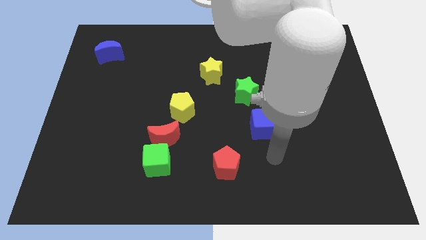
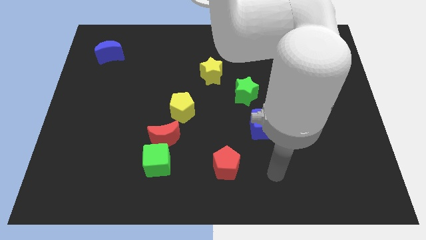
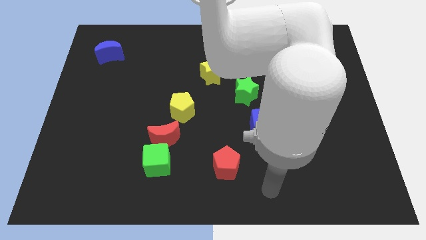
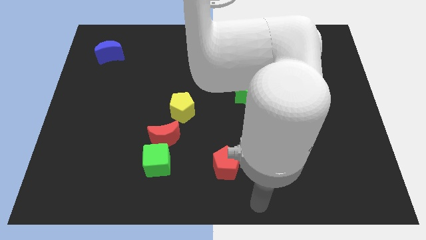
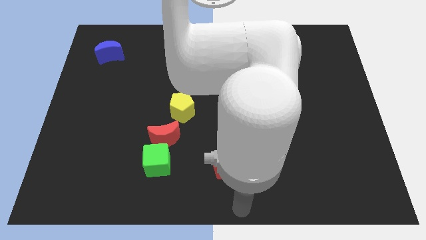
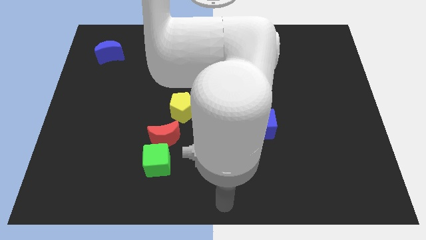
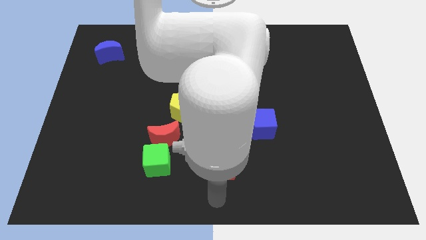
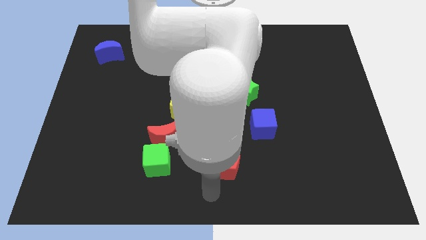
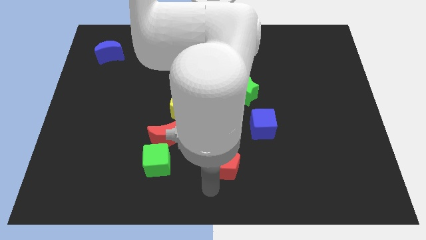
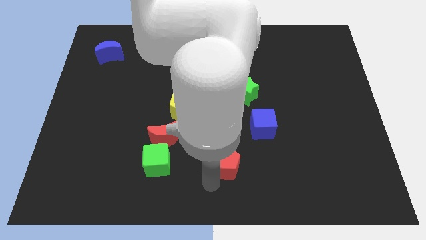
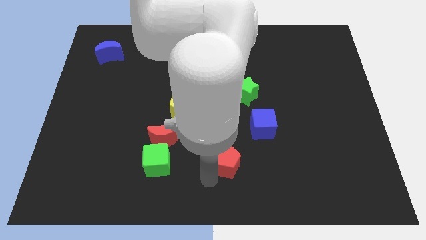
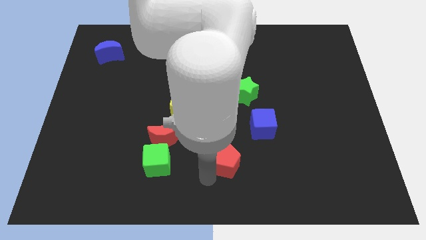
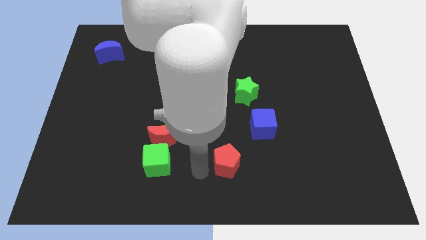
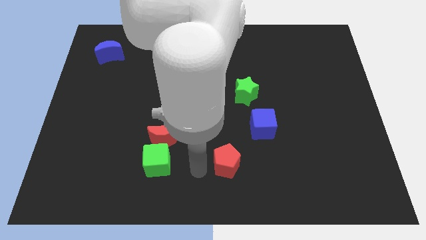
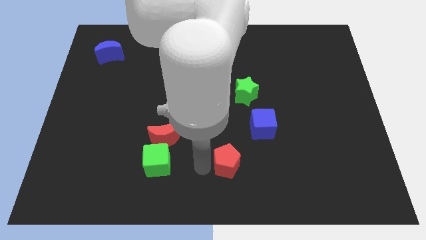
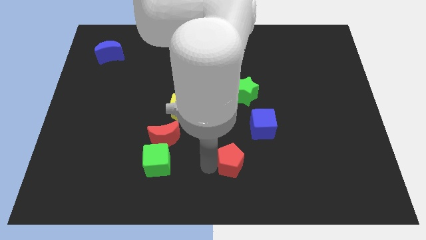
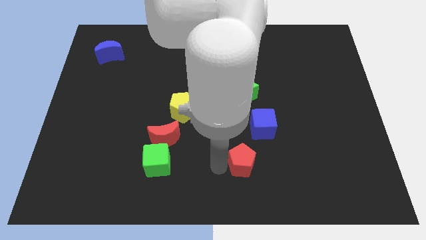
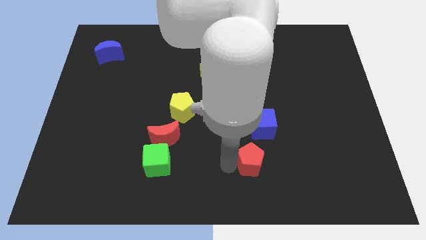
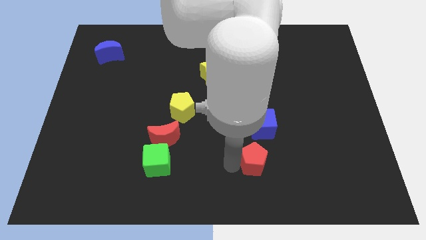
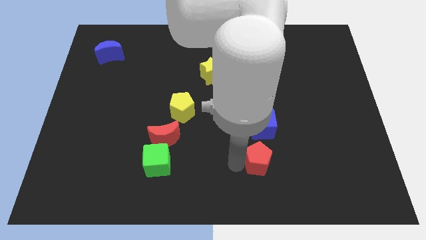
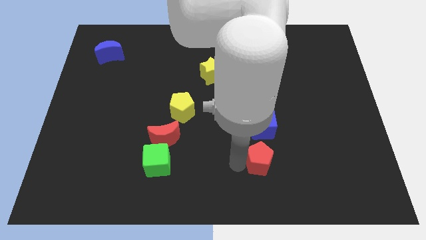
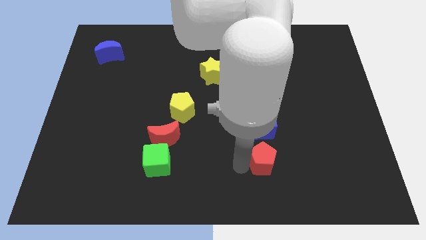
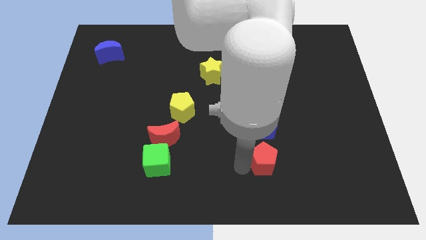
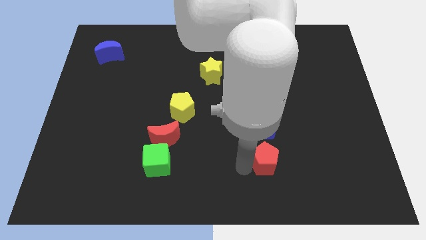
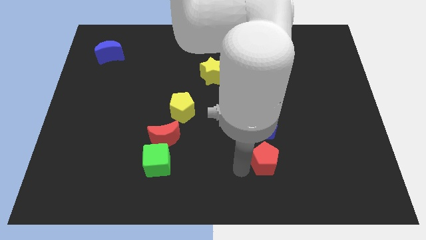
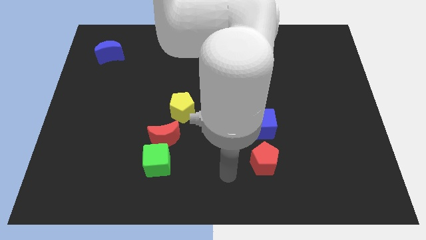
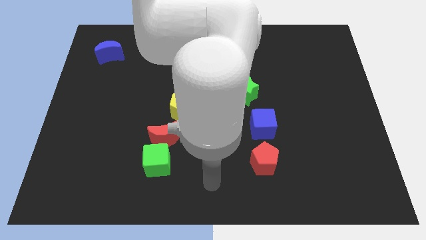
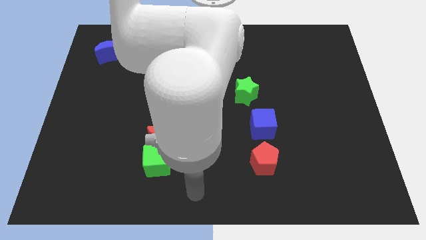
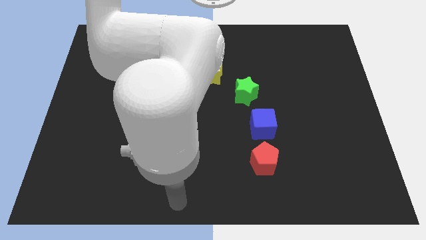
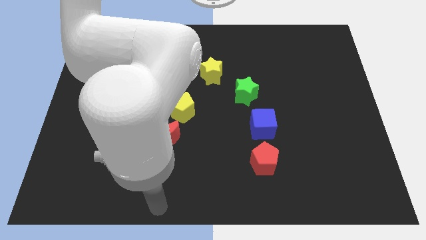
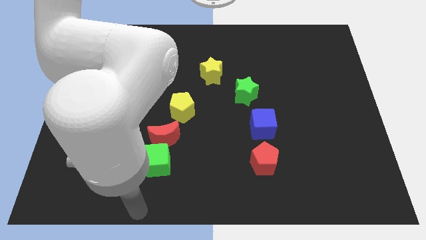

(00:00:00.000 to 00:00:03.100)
place the red pentagon vertically below to the blue cube

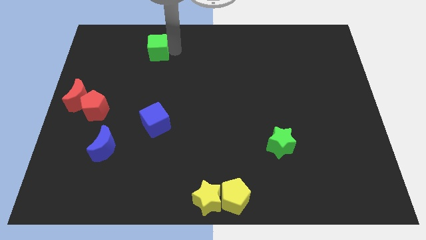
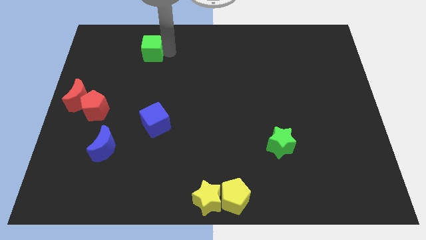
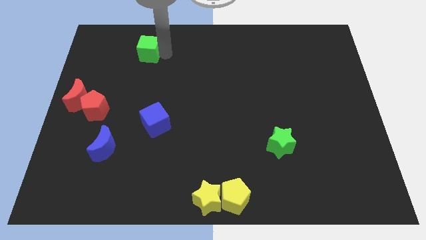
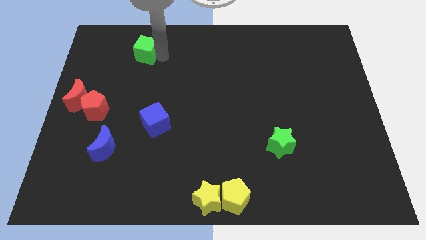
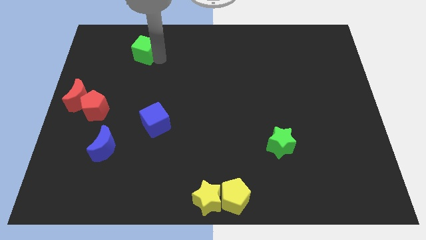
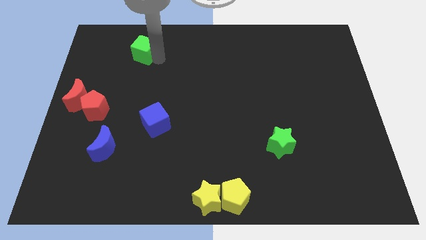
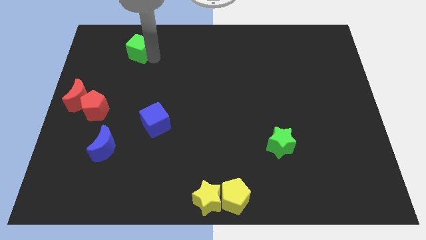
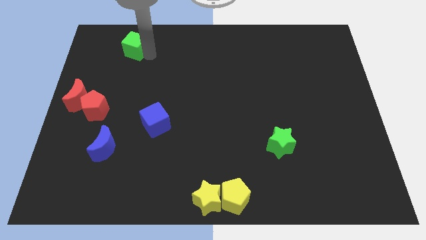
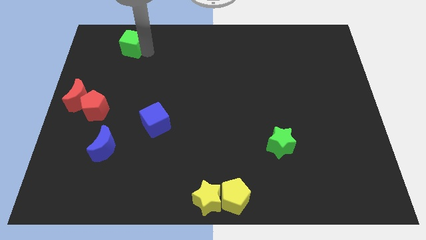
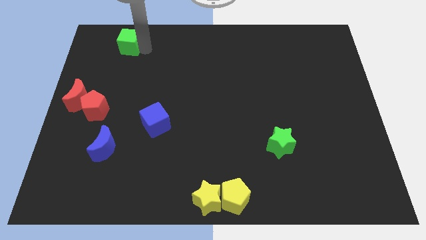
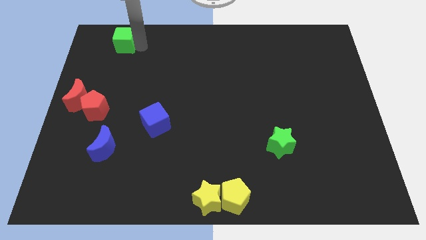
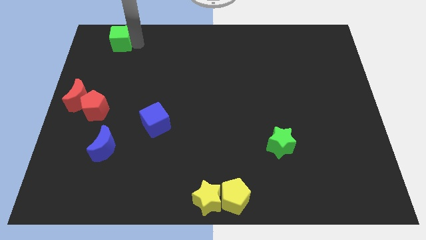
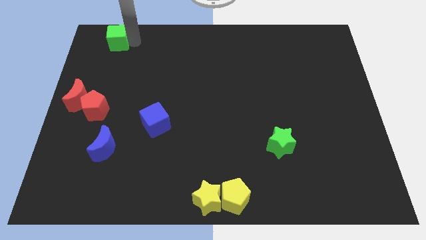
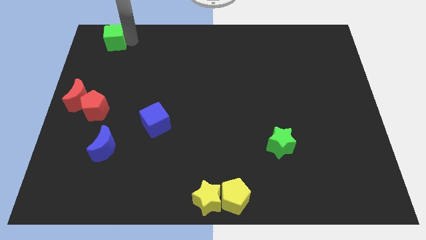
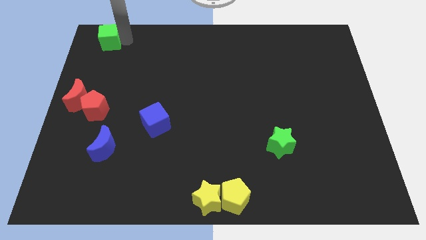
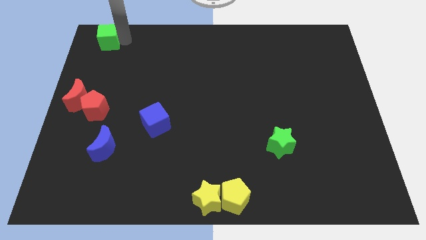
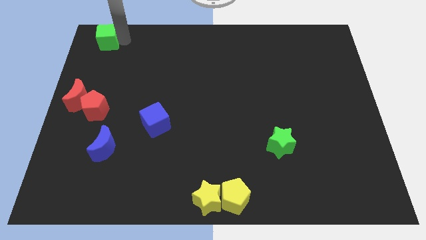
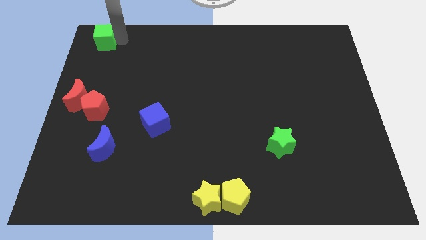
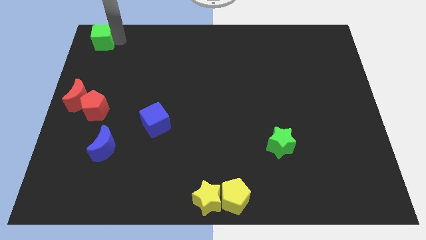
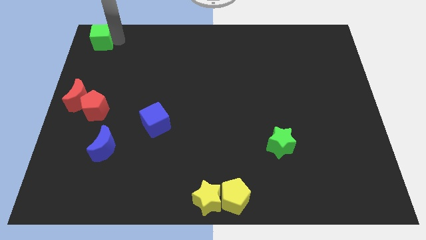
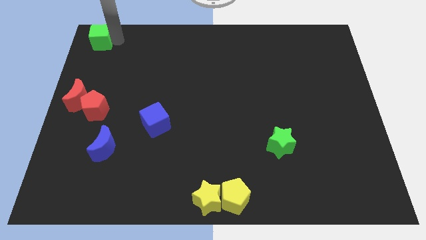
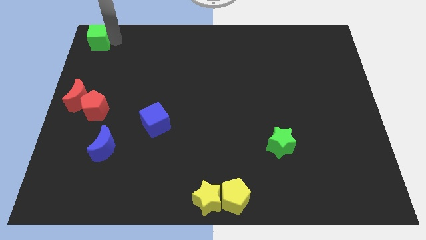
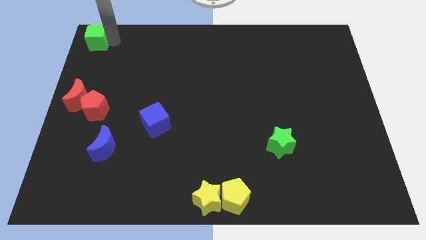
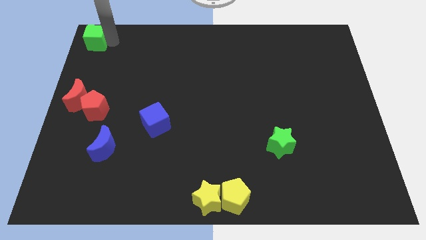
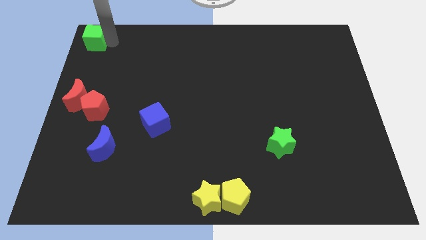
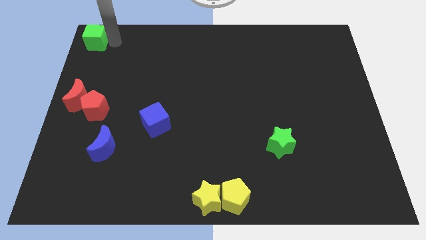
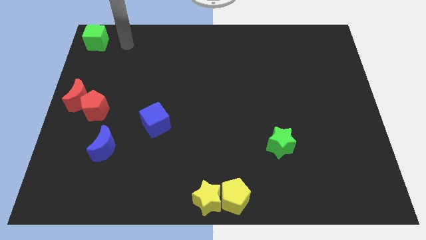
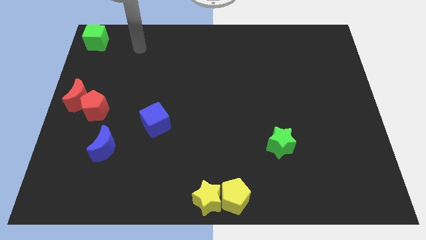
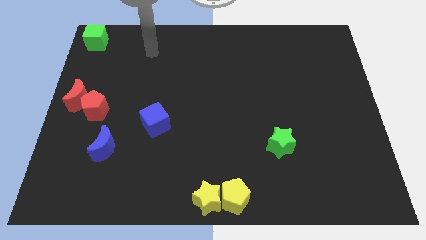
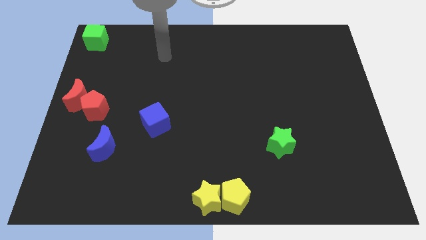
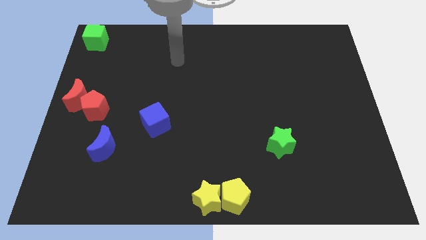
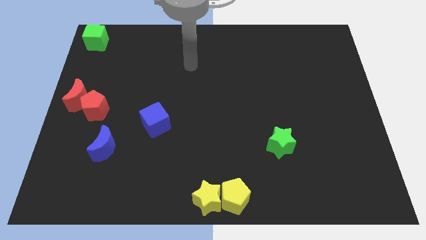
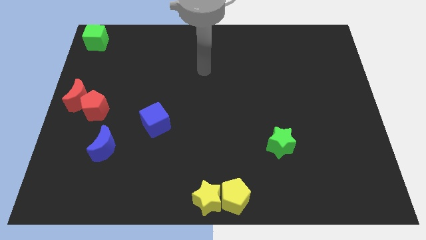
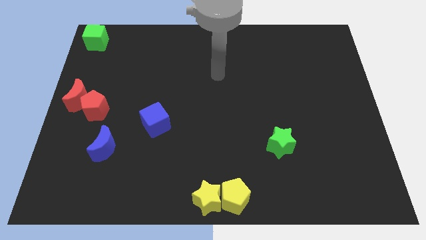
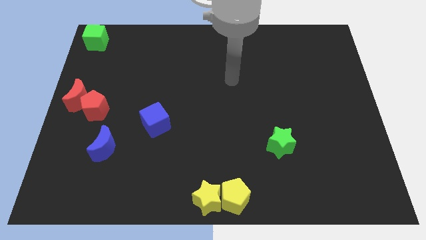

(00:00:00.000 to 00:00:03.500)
place the green cube at the top left corner of the board

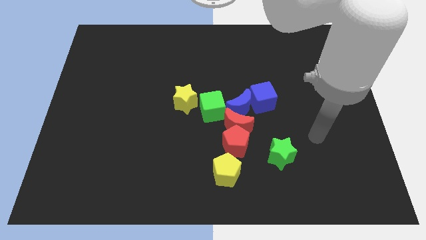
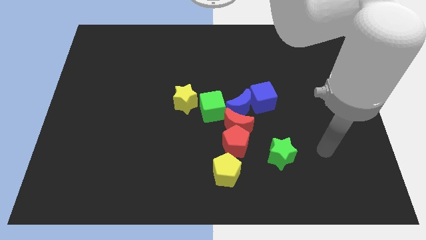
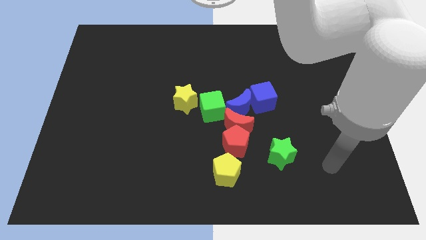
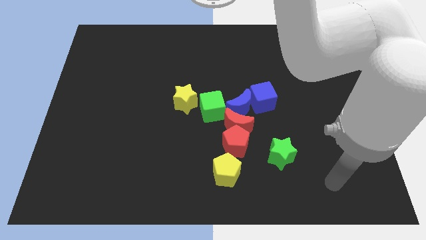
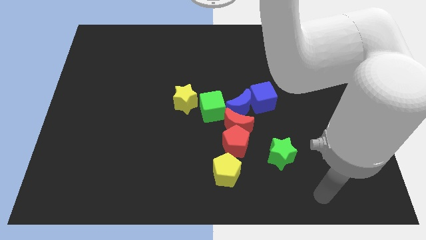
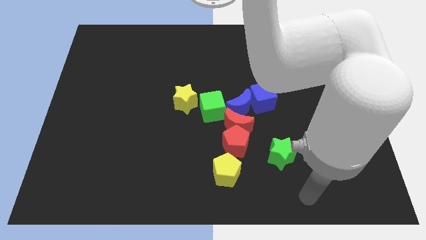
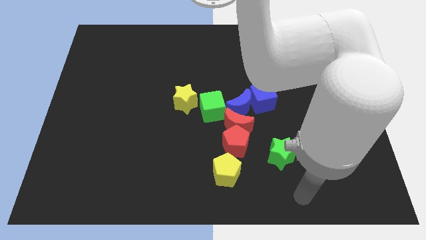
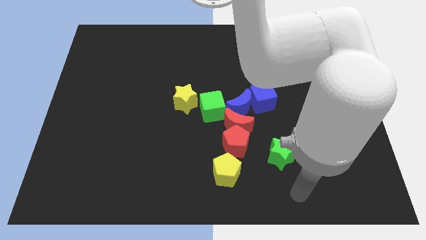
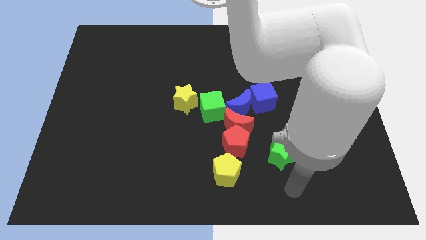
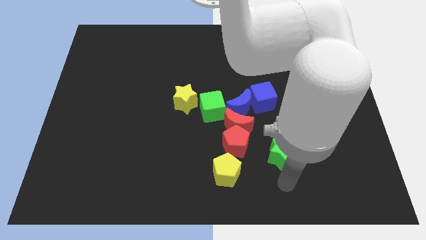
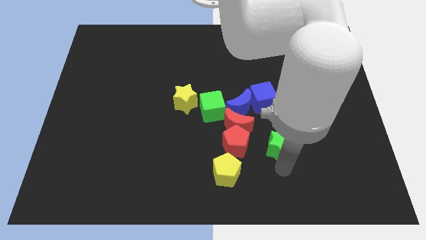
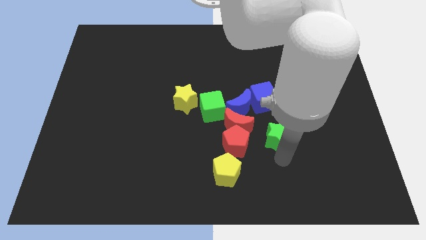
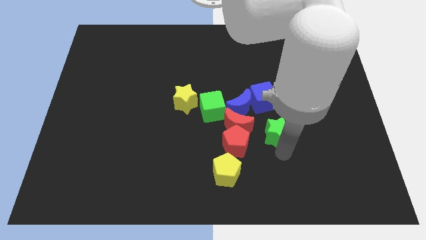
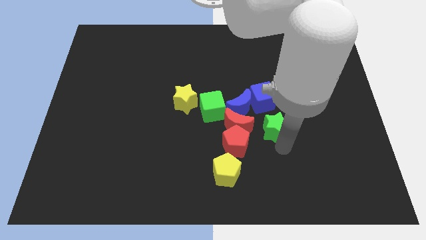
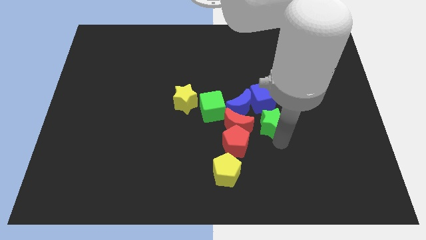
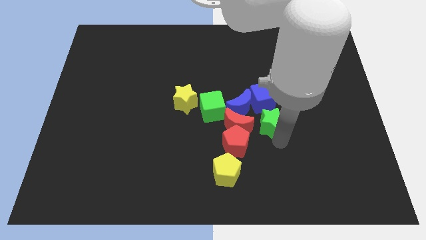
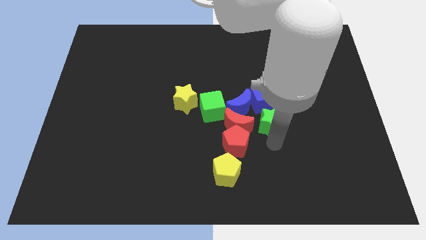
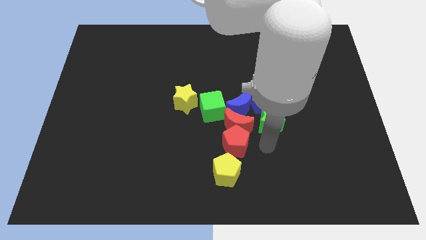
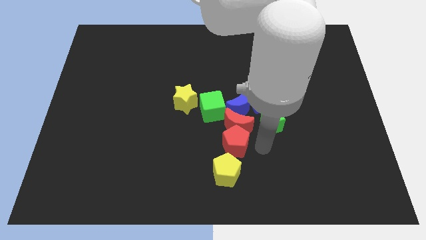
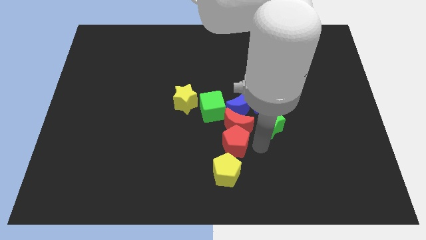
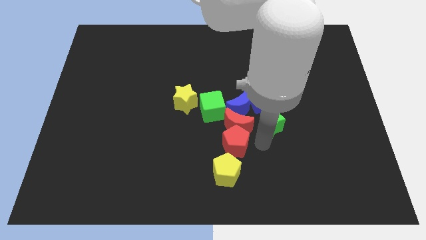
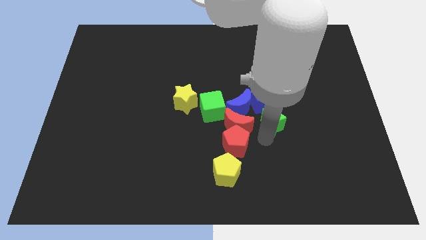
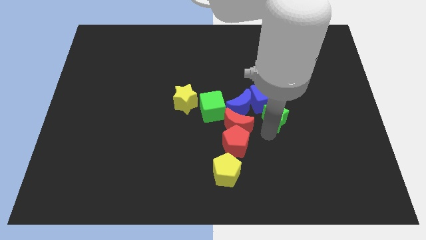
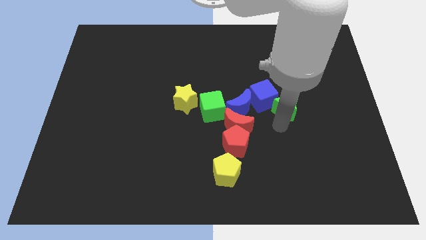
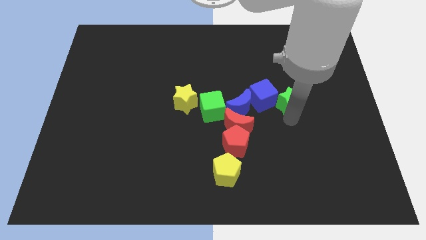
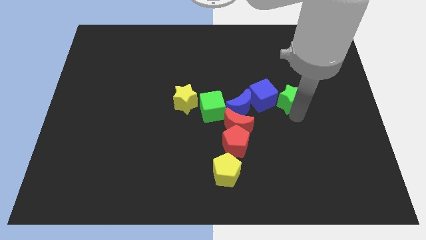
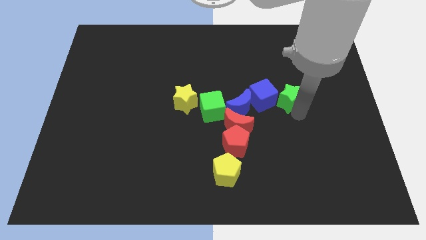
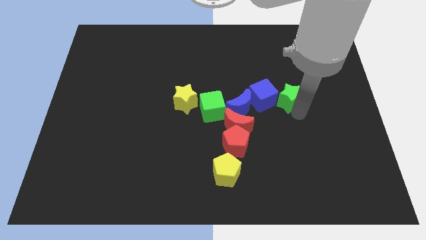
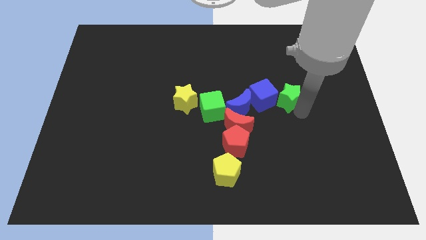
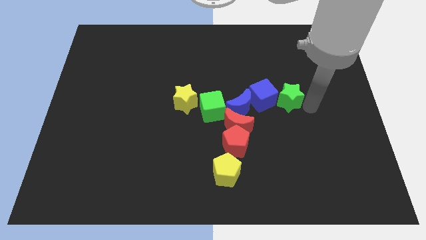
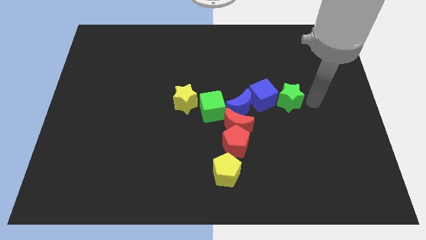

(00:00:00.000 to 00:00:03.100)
place green star right to blue cube
